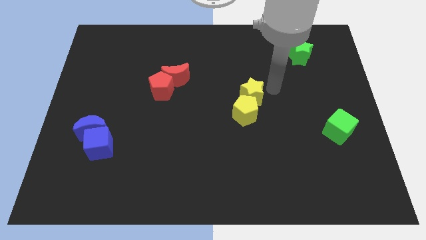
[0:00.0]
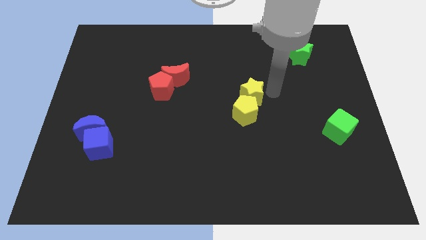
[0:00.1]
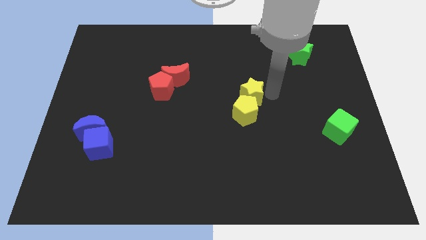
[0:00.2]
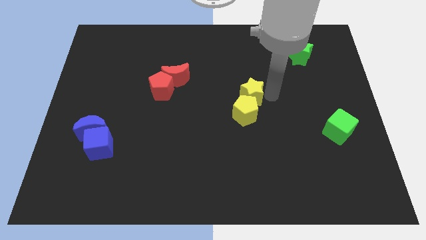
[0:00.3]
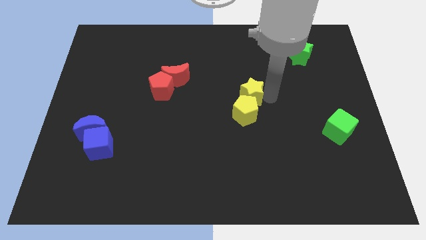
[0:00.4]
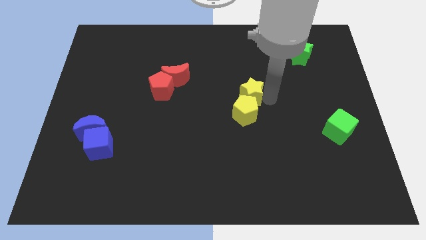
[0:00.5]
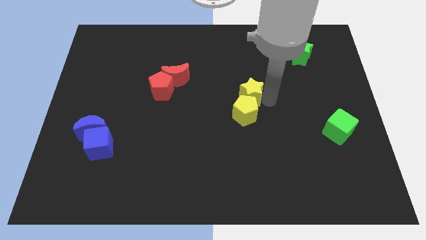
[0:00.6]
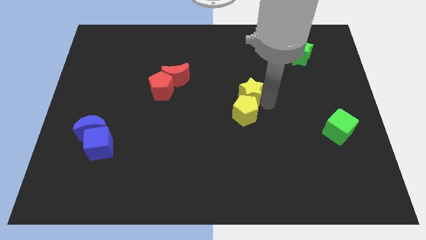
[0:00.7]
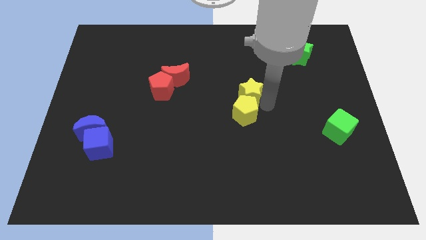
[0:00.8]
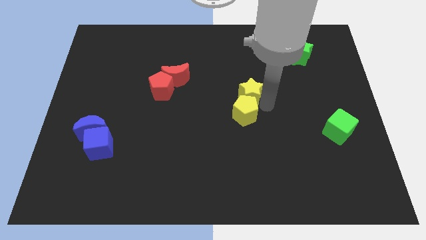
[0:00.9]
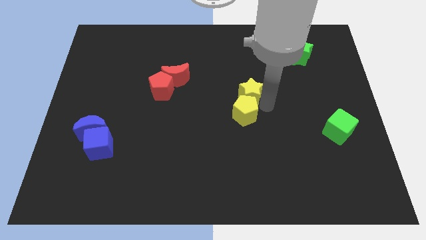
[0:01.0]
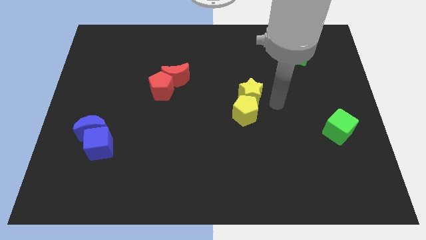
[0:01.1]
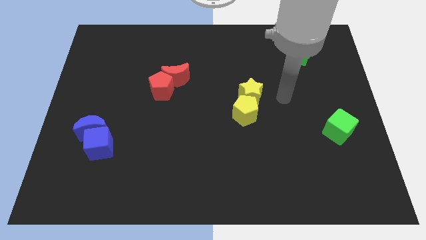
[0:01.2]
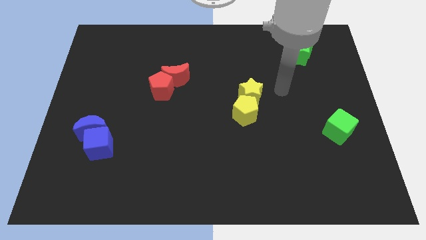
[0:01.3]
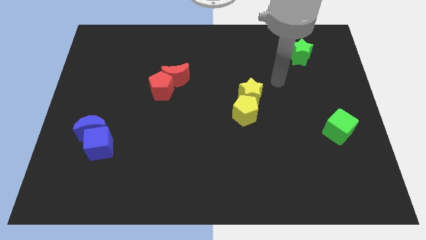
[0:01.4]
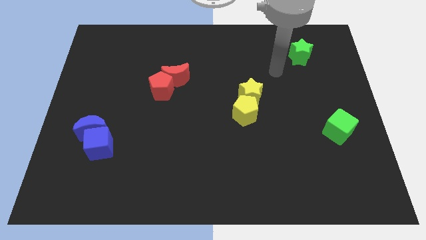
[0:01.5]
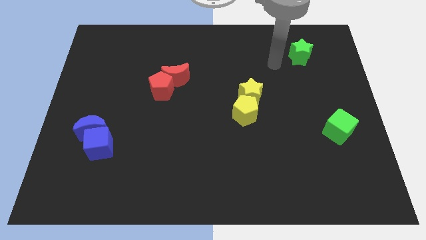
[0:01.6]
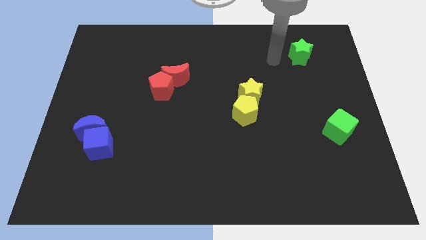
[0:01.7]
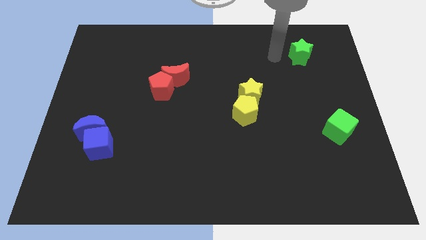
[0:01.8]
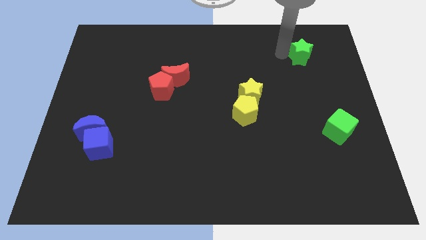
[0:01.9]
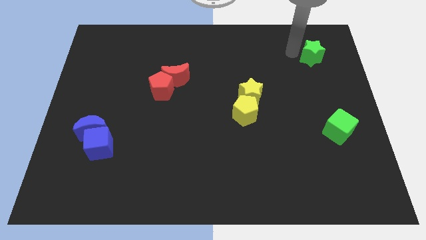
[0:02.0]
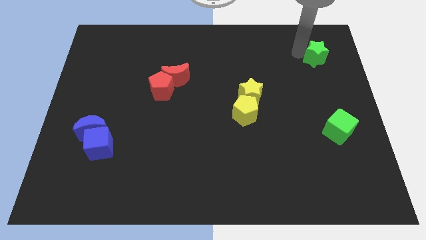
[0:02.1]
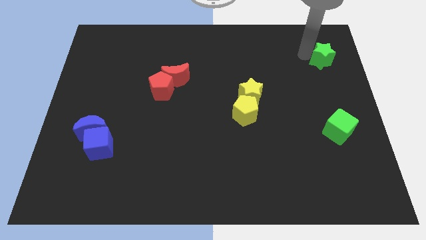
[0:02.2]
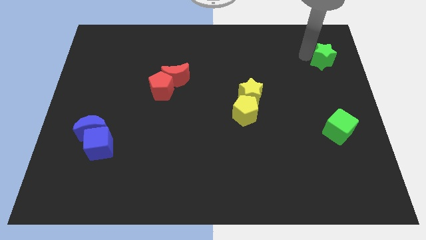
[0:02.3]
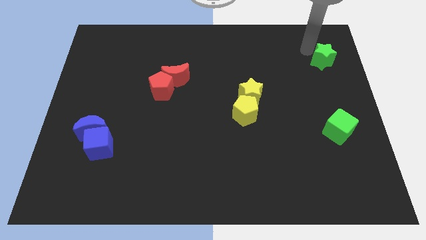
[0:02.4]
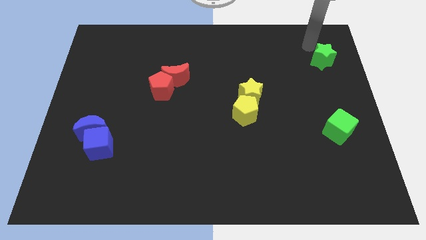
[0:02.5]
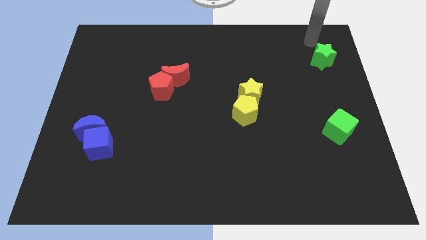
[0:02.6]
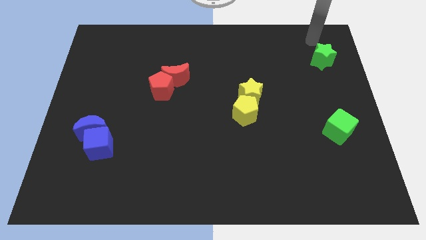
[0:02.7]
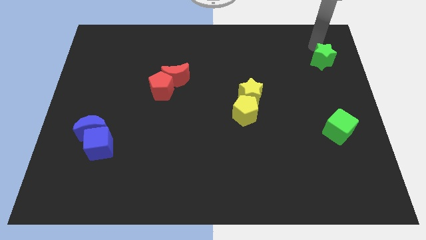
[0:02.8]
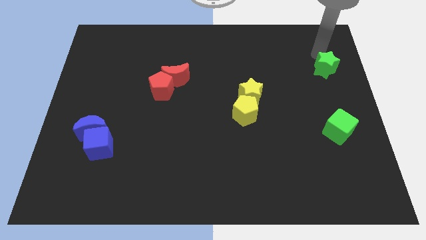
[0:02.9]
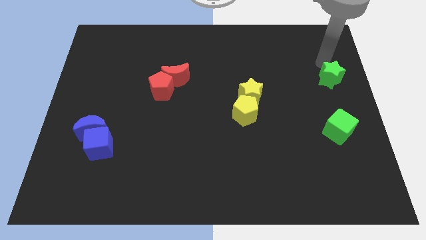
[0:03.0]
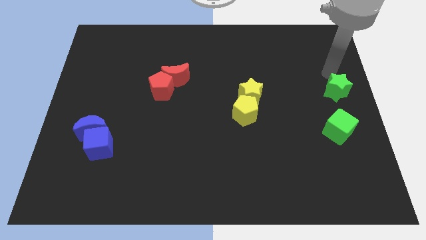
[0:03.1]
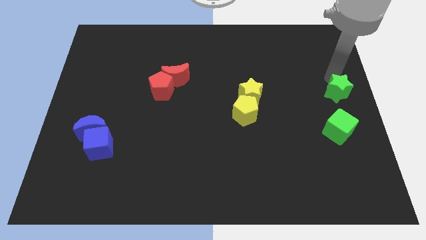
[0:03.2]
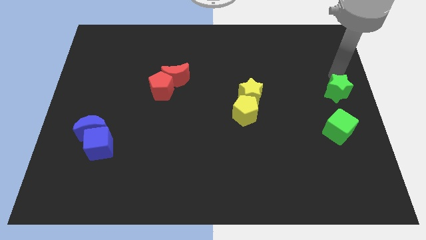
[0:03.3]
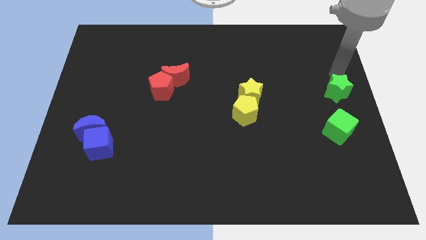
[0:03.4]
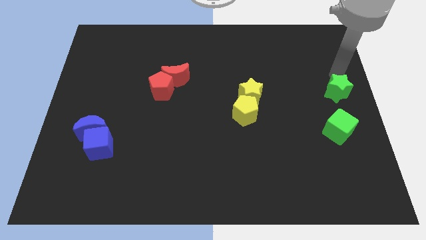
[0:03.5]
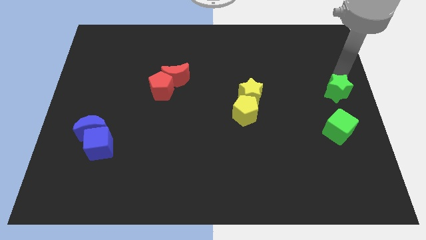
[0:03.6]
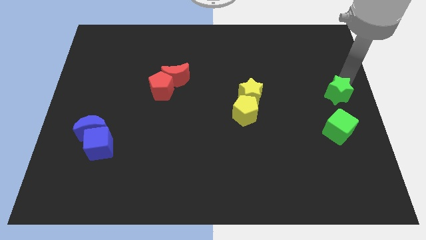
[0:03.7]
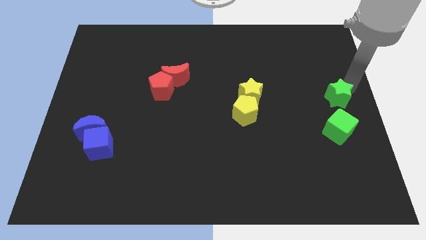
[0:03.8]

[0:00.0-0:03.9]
move green star above the green cube

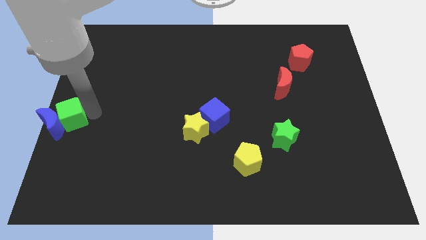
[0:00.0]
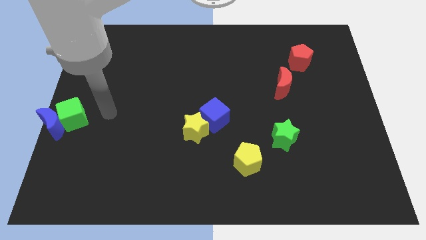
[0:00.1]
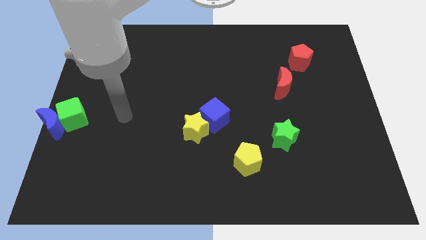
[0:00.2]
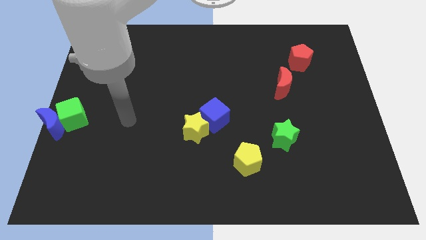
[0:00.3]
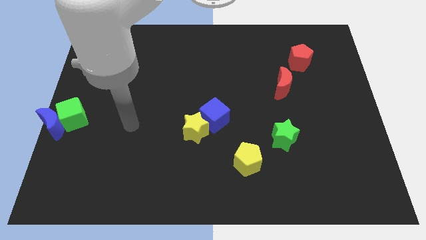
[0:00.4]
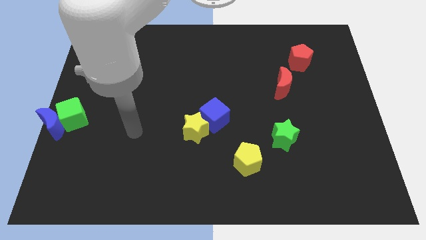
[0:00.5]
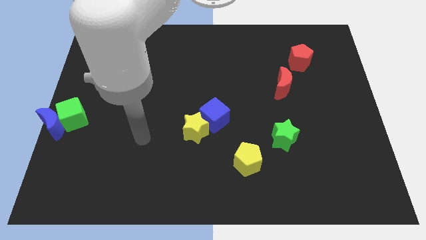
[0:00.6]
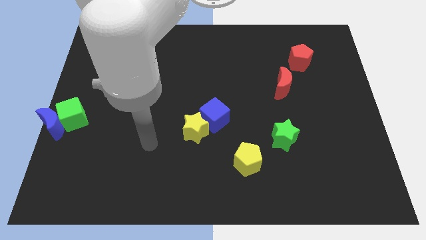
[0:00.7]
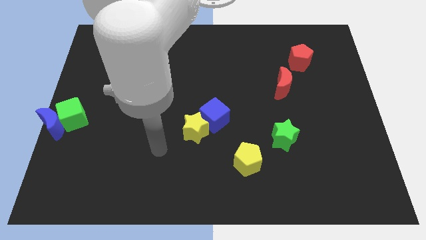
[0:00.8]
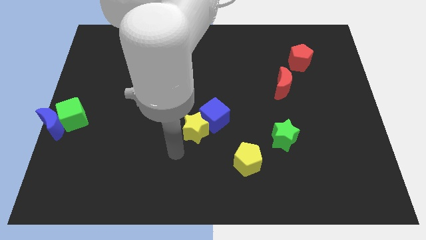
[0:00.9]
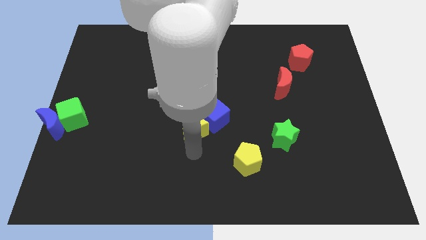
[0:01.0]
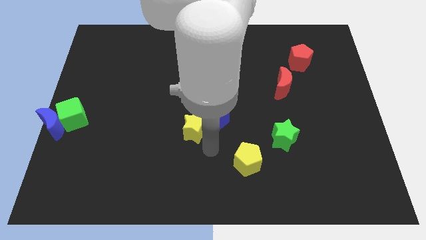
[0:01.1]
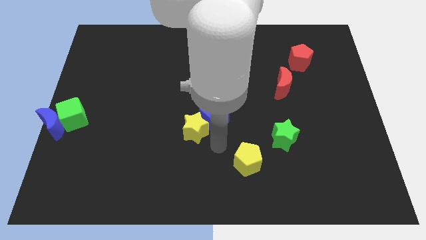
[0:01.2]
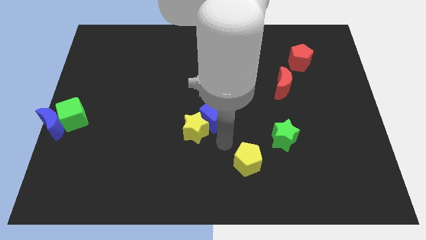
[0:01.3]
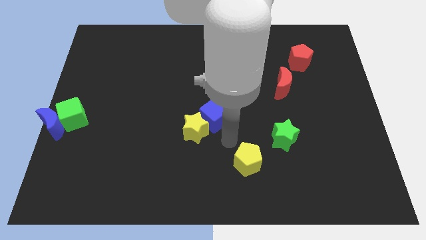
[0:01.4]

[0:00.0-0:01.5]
move your hand away from the green cube

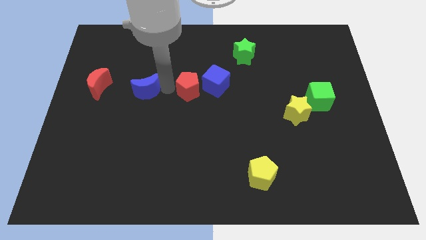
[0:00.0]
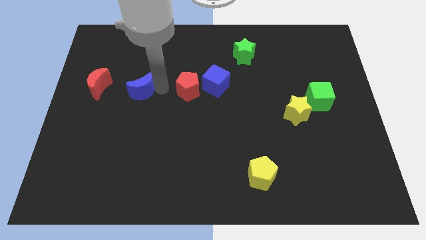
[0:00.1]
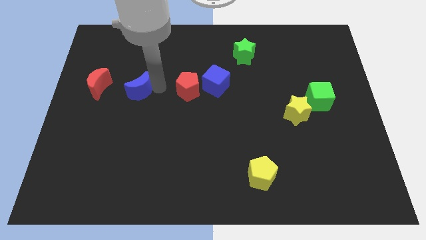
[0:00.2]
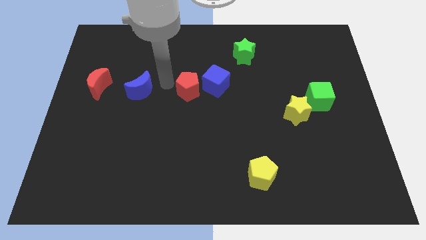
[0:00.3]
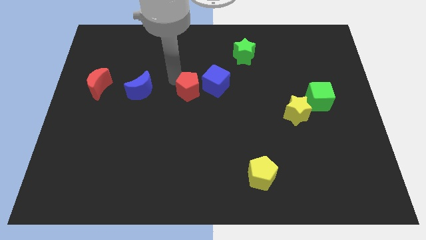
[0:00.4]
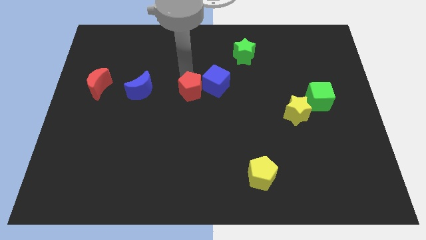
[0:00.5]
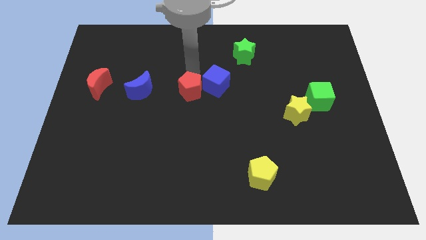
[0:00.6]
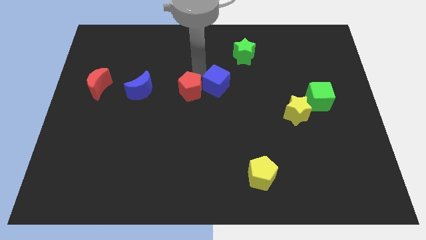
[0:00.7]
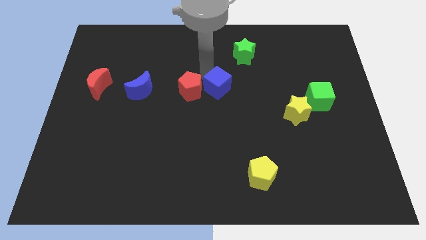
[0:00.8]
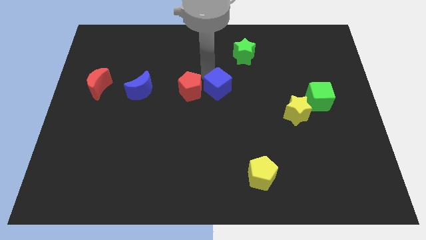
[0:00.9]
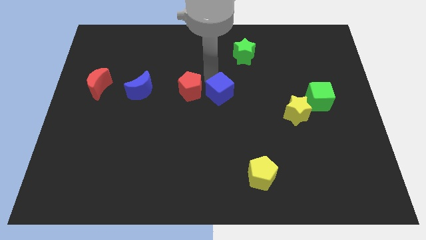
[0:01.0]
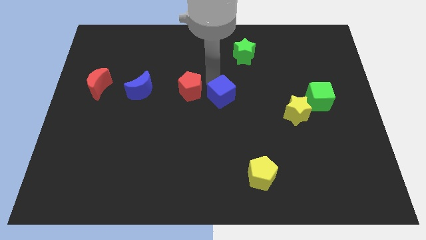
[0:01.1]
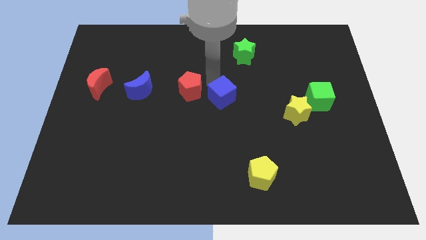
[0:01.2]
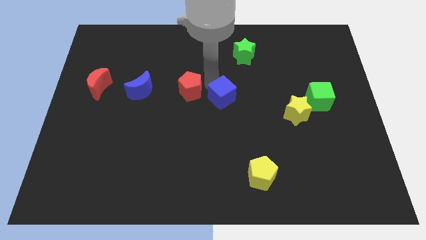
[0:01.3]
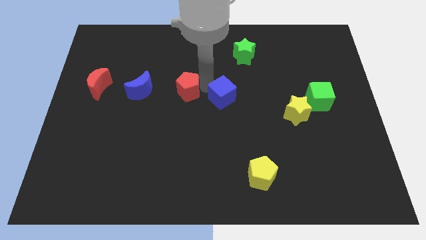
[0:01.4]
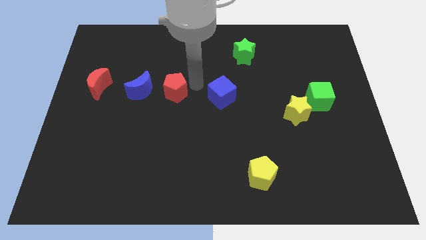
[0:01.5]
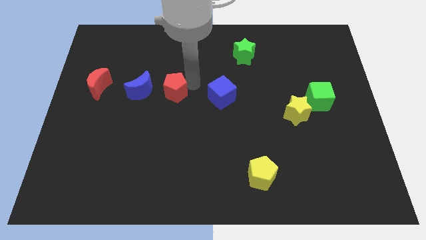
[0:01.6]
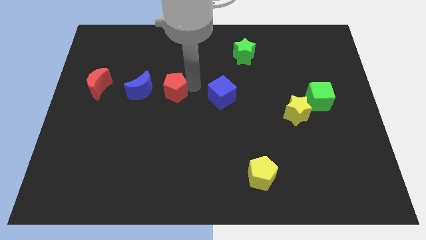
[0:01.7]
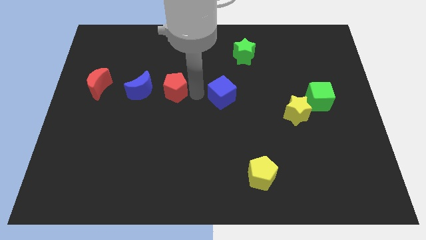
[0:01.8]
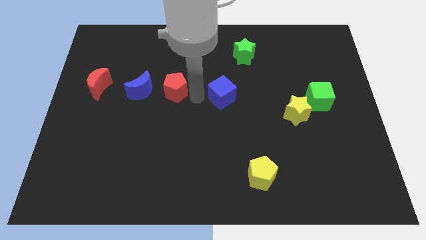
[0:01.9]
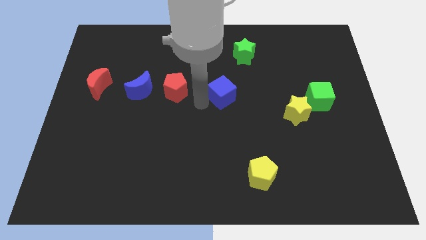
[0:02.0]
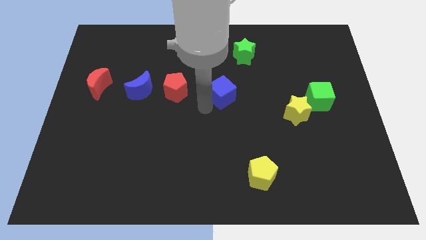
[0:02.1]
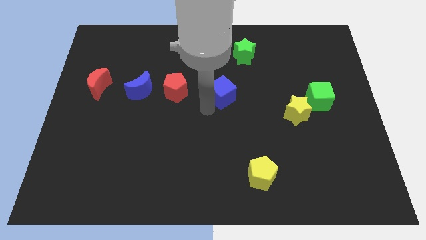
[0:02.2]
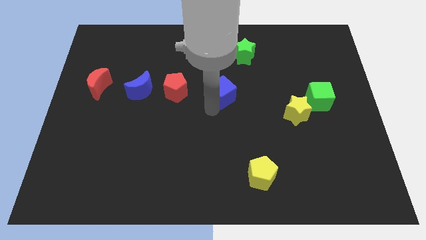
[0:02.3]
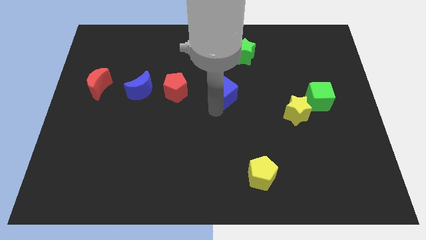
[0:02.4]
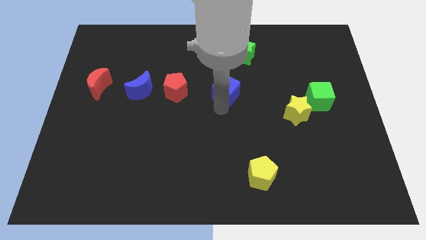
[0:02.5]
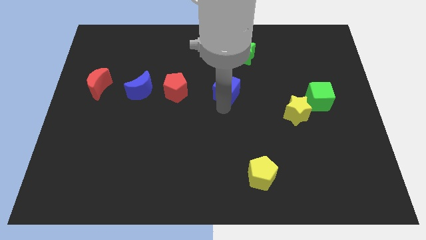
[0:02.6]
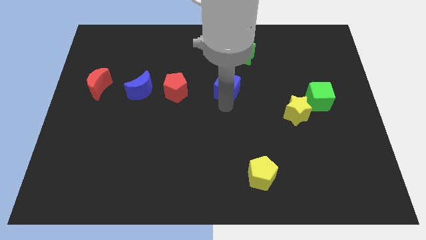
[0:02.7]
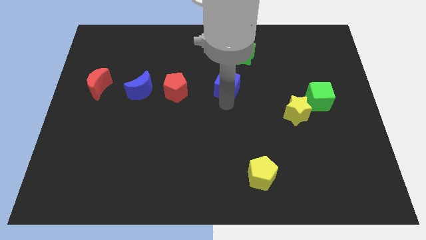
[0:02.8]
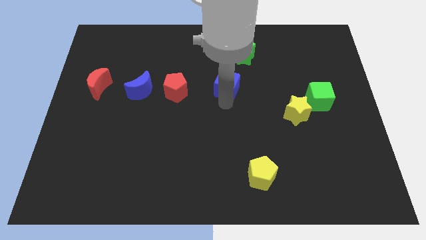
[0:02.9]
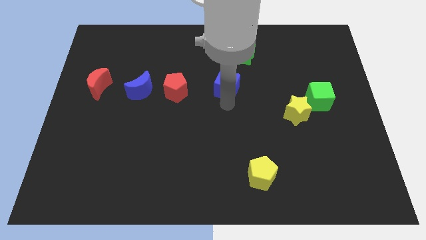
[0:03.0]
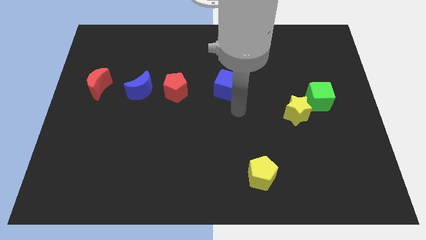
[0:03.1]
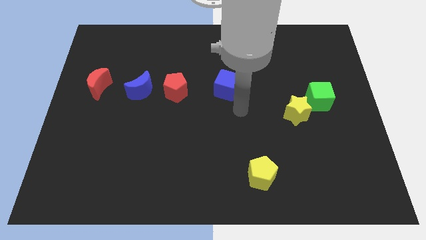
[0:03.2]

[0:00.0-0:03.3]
place the red and blue blocks in the horizontal line

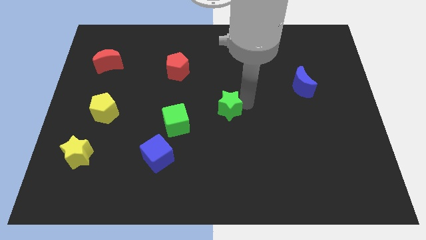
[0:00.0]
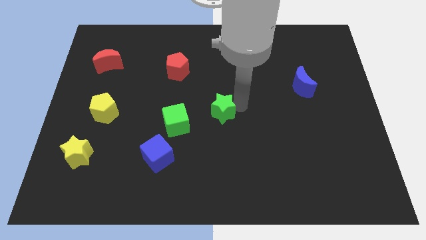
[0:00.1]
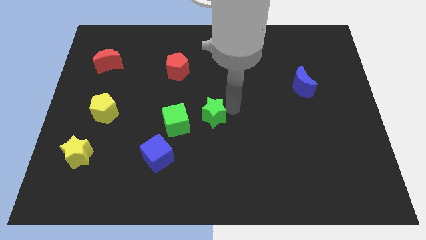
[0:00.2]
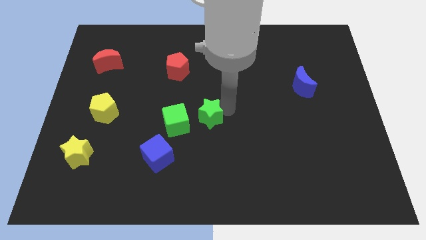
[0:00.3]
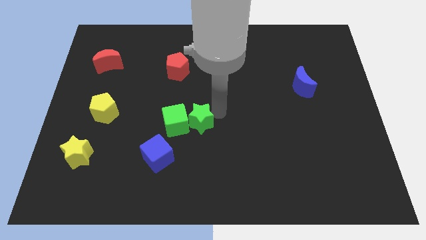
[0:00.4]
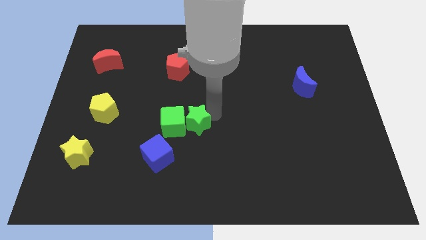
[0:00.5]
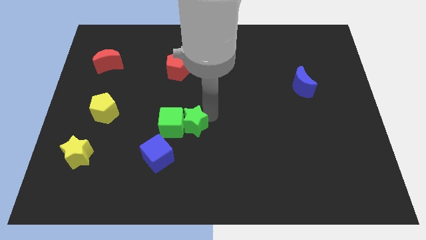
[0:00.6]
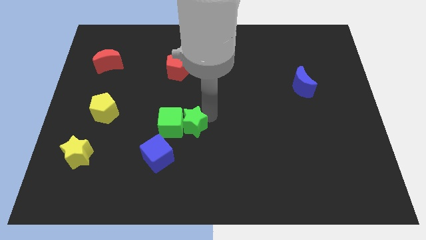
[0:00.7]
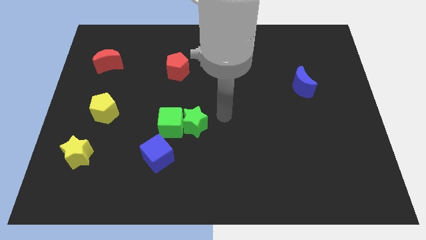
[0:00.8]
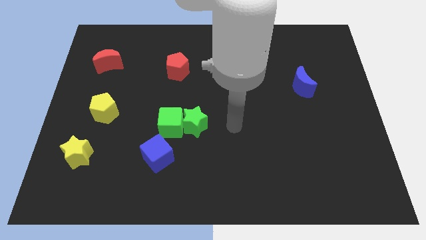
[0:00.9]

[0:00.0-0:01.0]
push green star in to green cube
